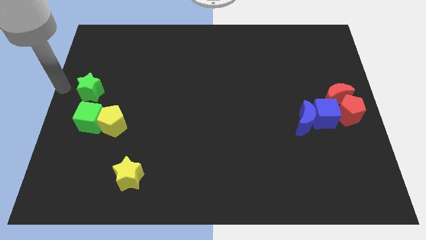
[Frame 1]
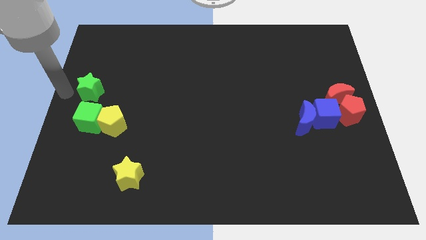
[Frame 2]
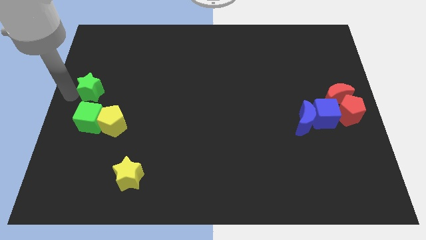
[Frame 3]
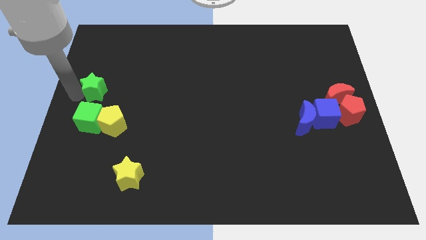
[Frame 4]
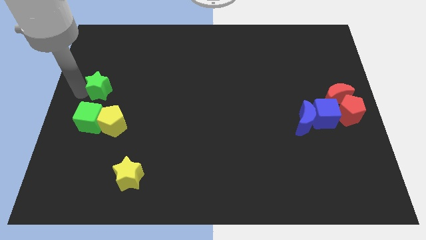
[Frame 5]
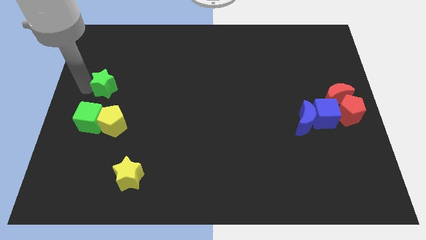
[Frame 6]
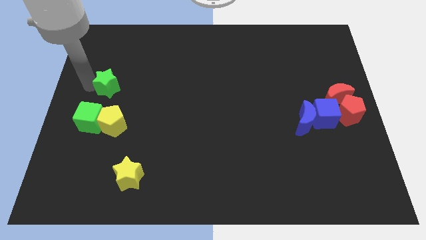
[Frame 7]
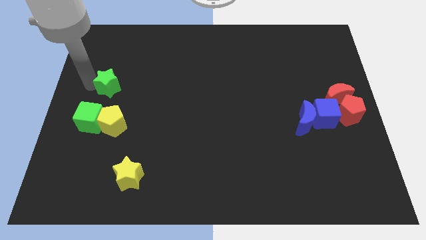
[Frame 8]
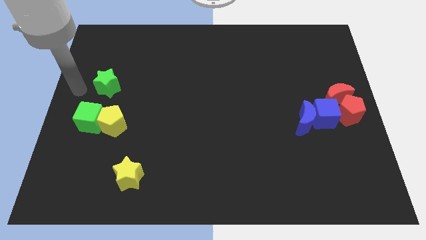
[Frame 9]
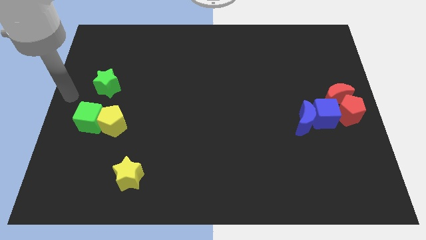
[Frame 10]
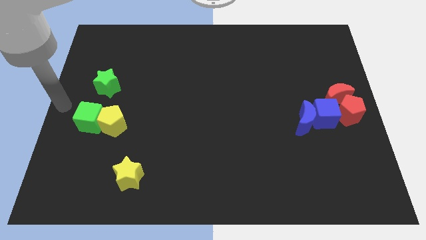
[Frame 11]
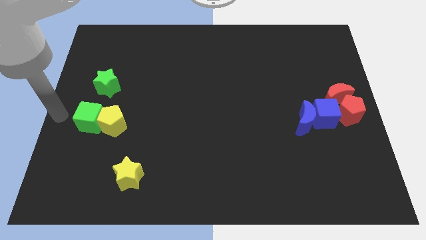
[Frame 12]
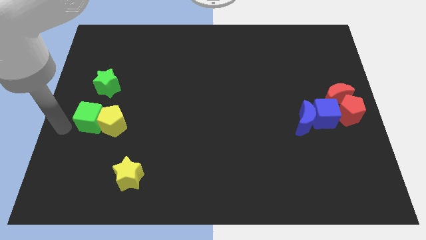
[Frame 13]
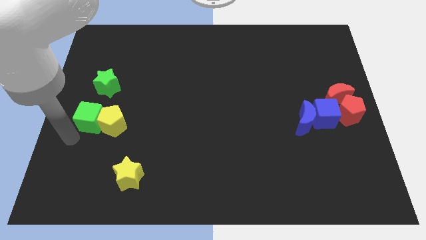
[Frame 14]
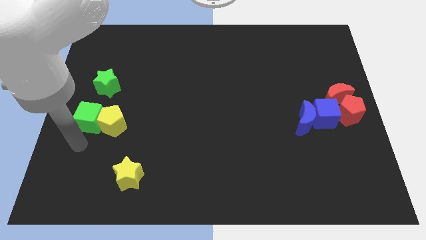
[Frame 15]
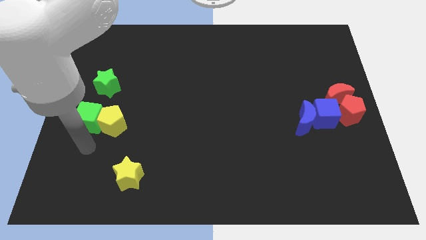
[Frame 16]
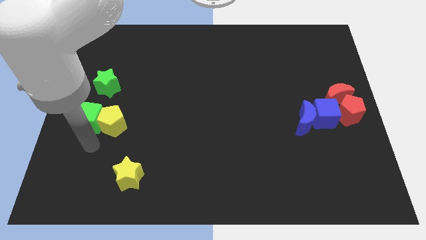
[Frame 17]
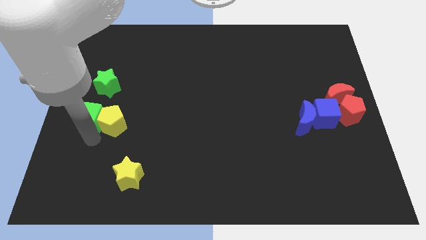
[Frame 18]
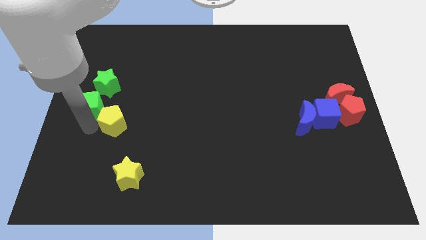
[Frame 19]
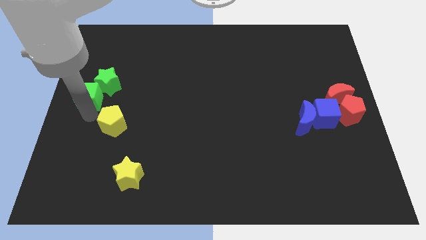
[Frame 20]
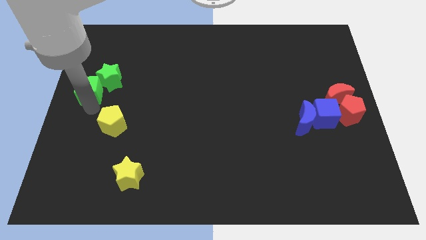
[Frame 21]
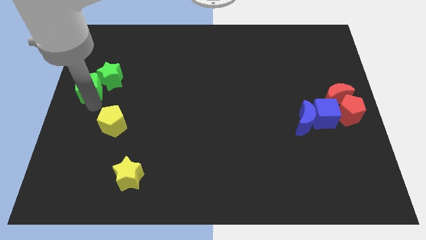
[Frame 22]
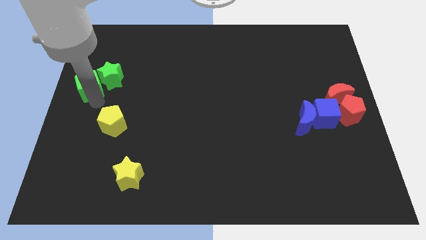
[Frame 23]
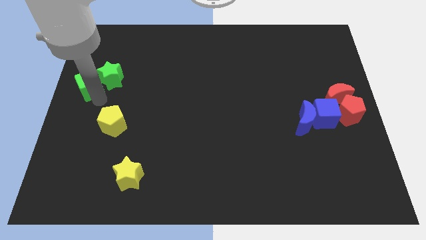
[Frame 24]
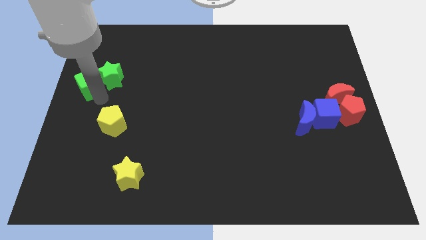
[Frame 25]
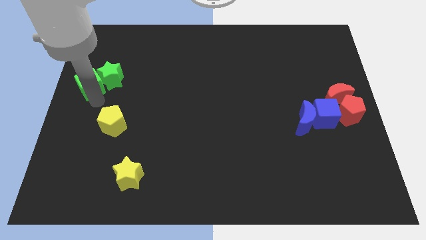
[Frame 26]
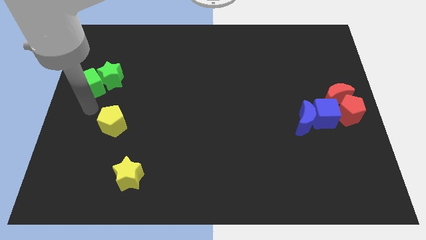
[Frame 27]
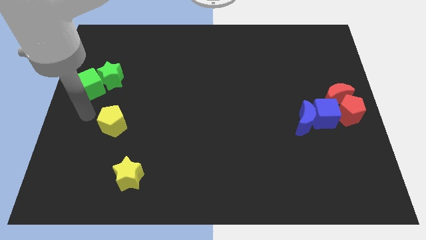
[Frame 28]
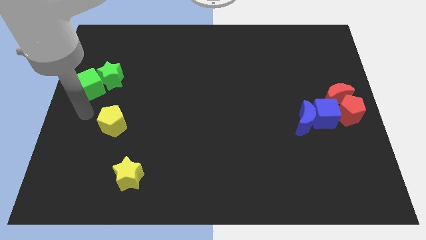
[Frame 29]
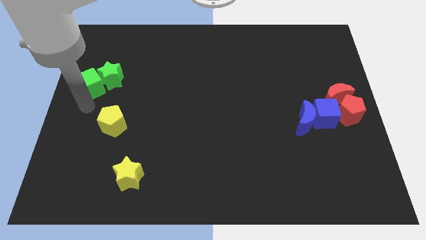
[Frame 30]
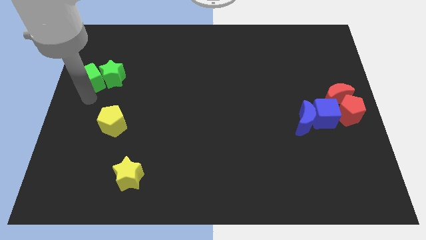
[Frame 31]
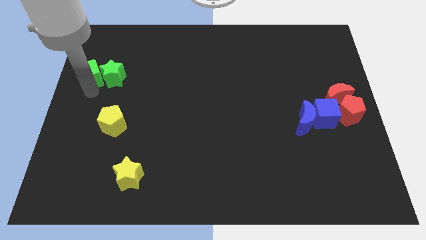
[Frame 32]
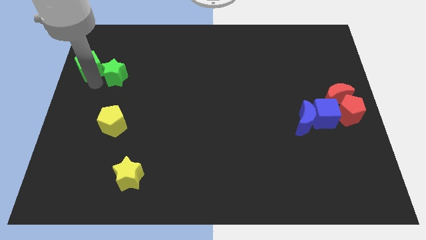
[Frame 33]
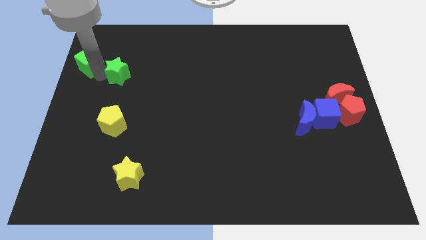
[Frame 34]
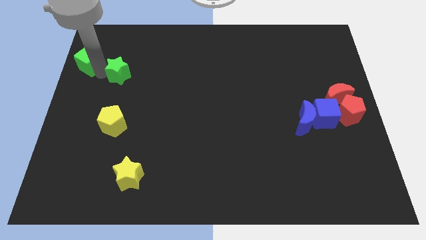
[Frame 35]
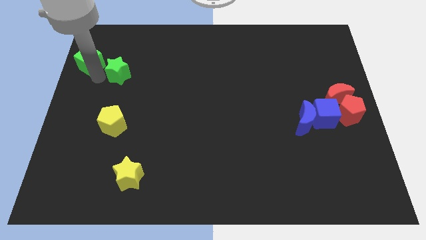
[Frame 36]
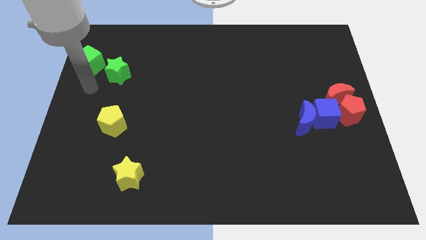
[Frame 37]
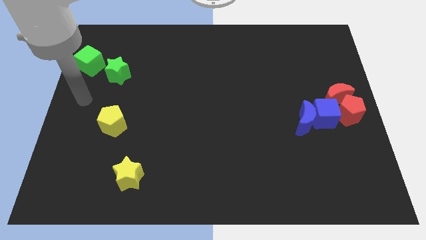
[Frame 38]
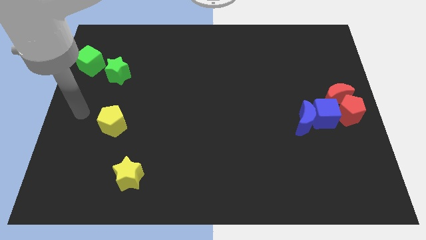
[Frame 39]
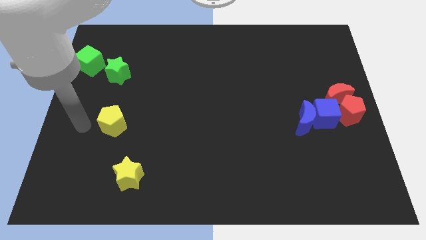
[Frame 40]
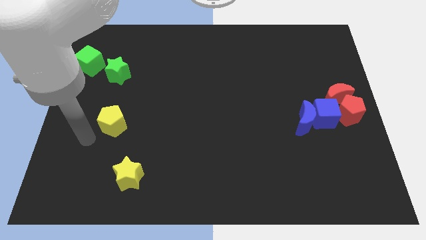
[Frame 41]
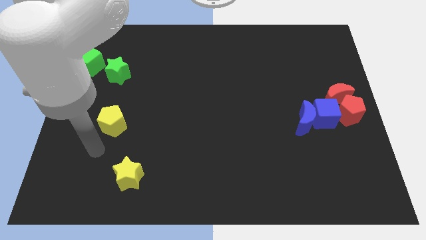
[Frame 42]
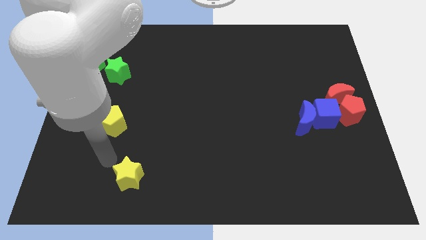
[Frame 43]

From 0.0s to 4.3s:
place the green cube to the left of green star

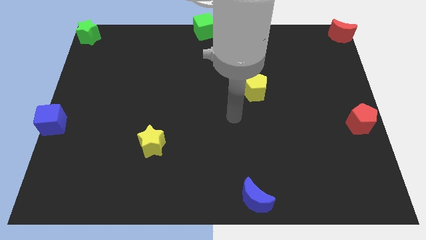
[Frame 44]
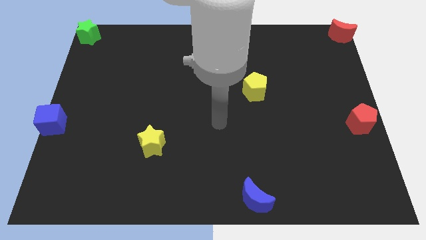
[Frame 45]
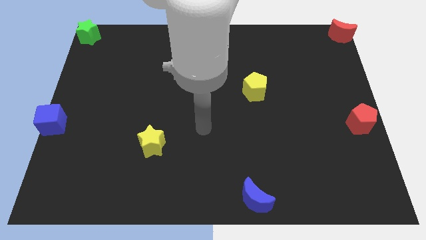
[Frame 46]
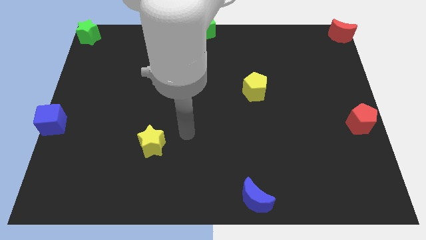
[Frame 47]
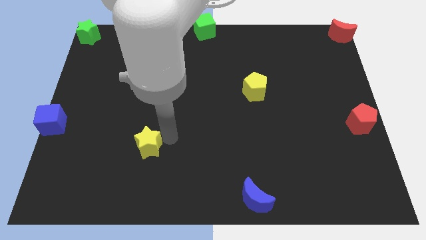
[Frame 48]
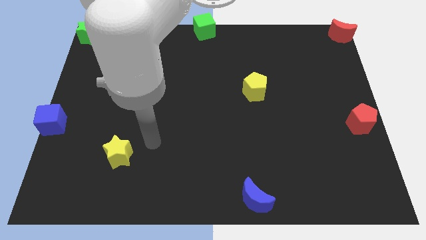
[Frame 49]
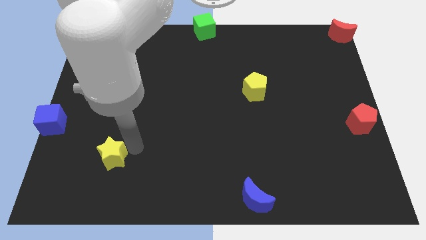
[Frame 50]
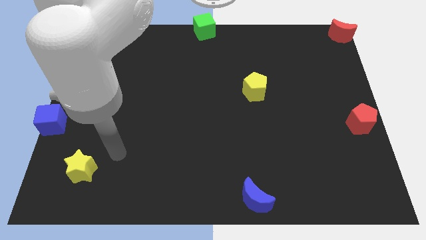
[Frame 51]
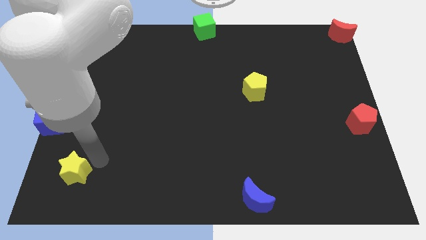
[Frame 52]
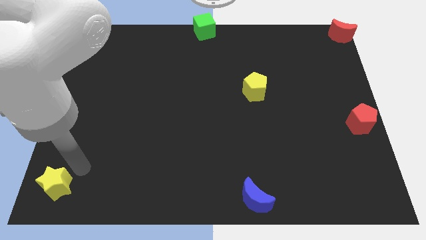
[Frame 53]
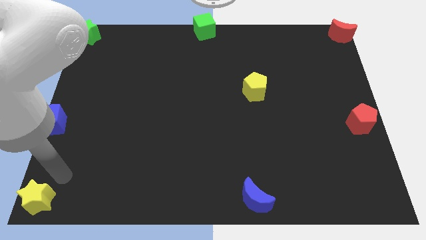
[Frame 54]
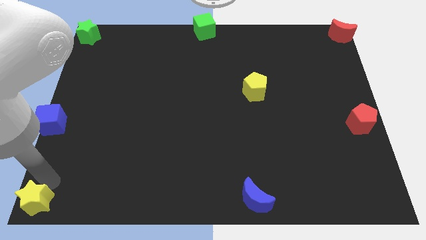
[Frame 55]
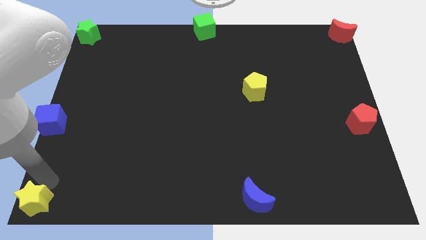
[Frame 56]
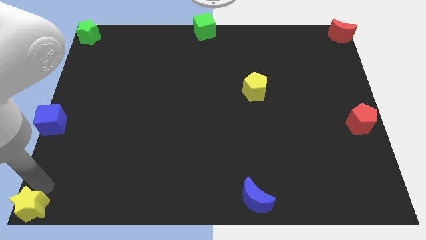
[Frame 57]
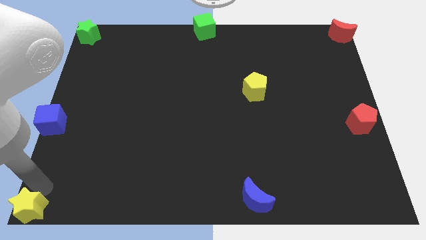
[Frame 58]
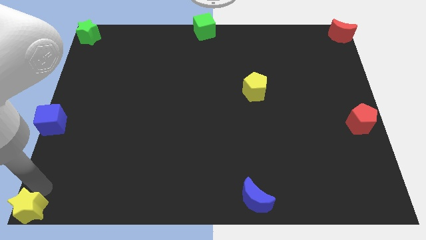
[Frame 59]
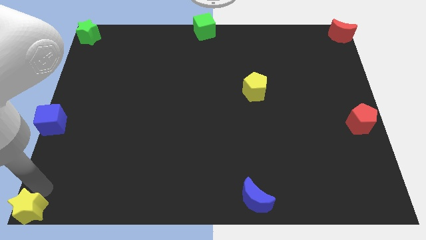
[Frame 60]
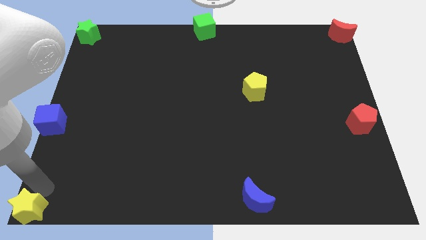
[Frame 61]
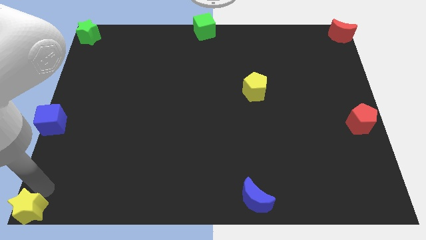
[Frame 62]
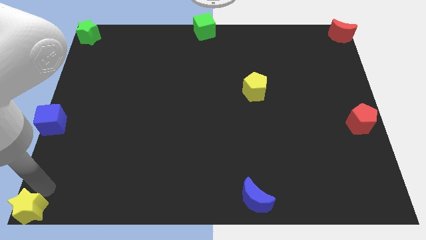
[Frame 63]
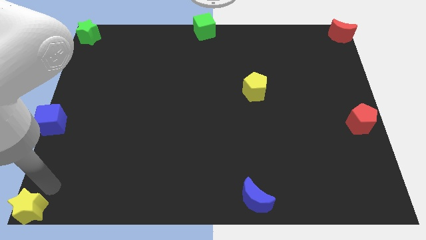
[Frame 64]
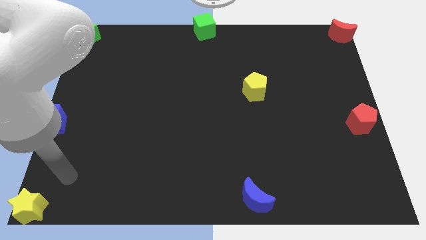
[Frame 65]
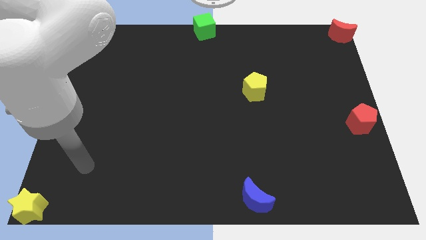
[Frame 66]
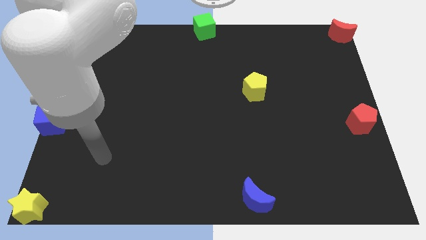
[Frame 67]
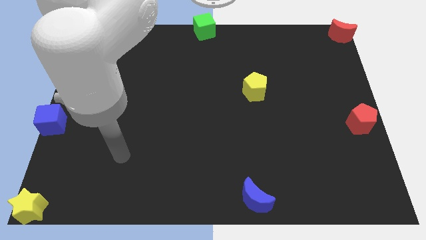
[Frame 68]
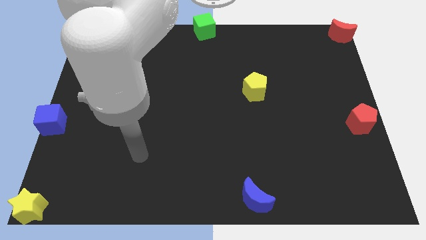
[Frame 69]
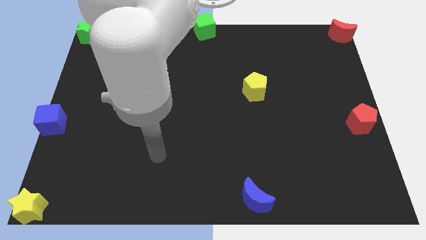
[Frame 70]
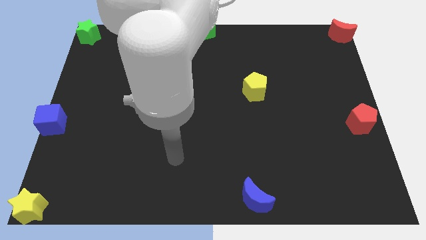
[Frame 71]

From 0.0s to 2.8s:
push the yellow star to the left corner

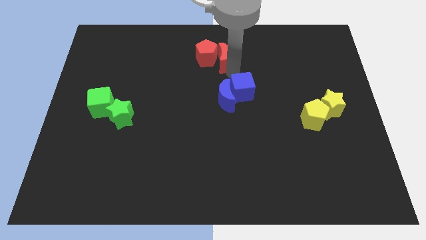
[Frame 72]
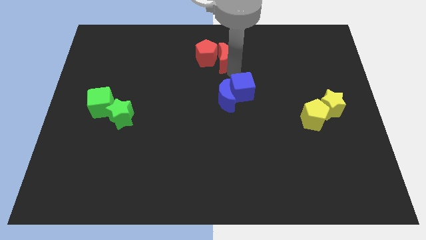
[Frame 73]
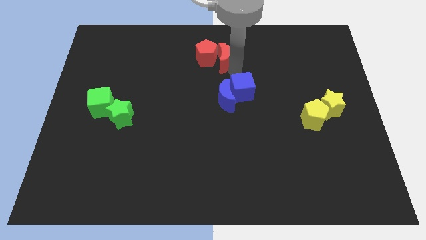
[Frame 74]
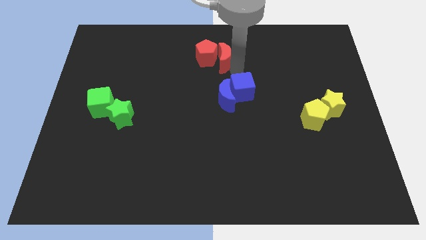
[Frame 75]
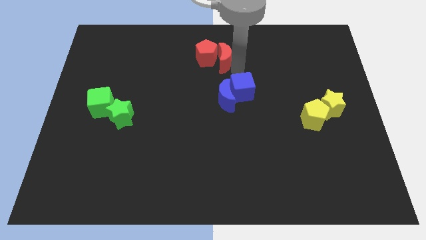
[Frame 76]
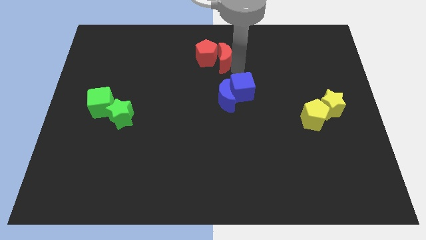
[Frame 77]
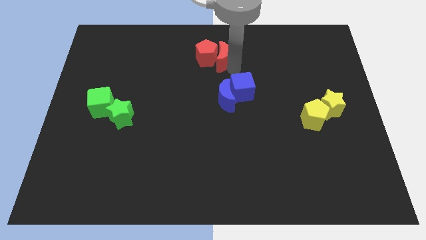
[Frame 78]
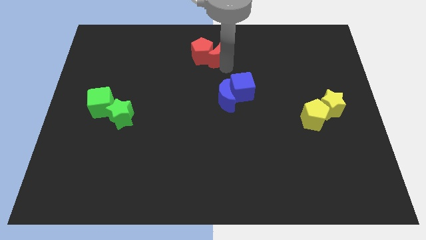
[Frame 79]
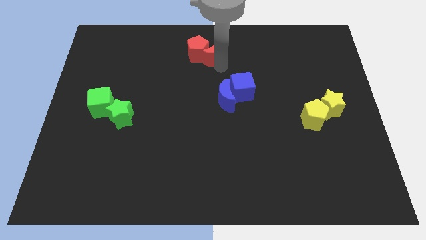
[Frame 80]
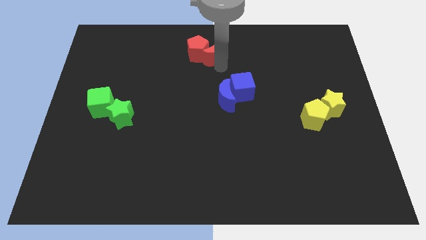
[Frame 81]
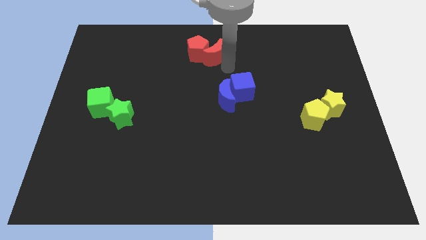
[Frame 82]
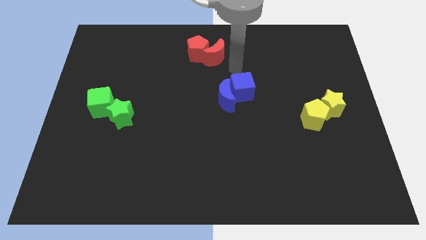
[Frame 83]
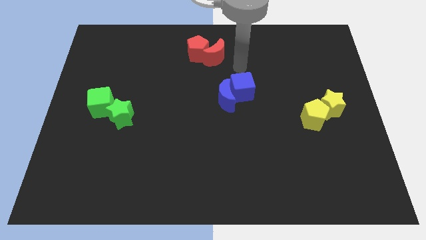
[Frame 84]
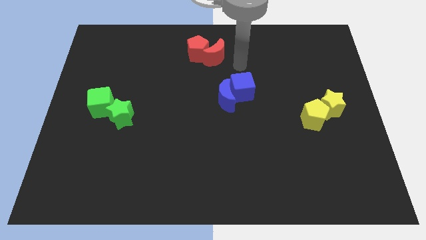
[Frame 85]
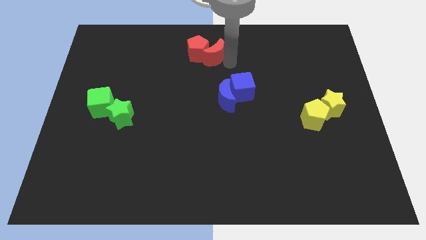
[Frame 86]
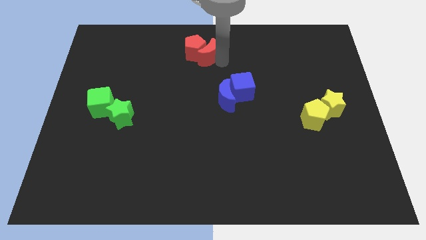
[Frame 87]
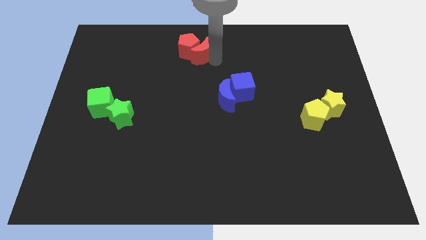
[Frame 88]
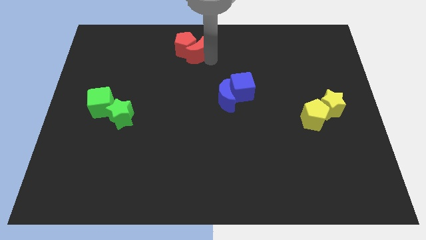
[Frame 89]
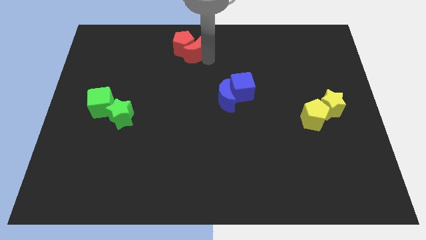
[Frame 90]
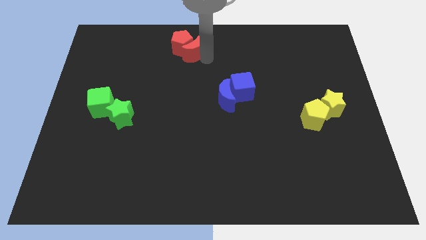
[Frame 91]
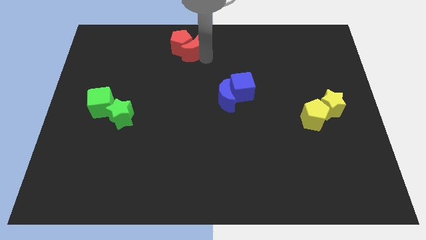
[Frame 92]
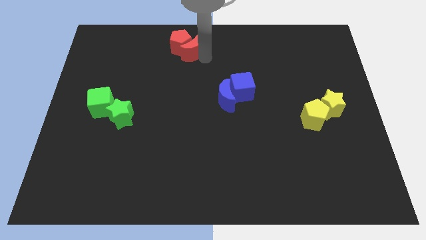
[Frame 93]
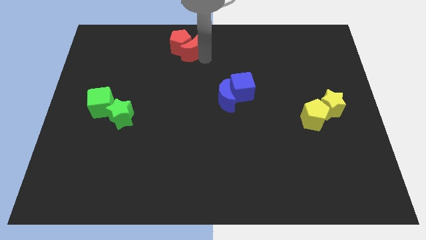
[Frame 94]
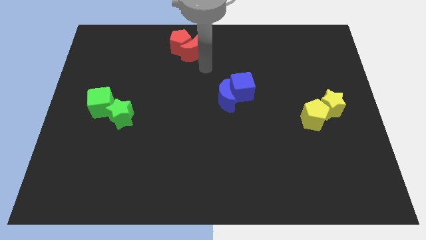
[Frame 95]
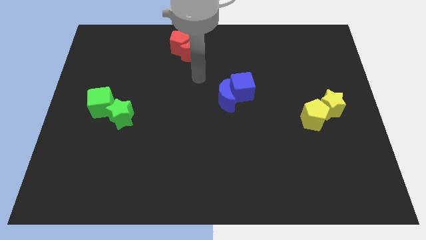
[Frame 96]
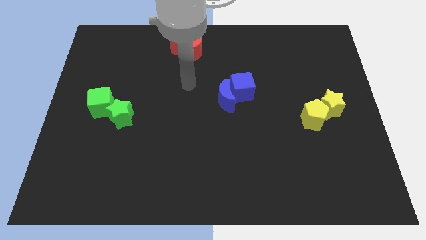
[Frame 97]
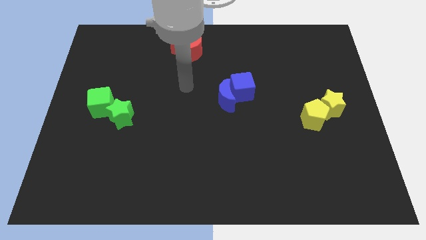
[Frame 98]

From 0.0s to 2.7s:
move the red blocks towards the top left of the board
